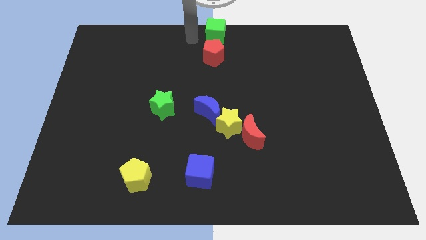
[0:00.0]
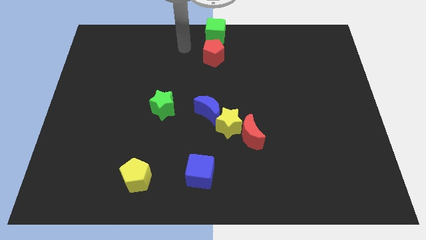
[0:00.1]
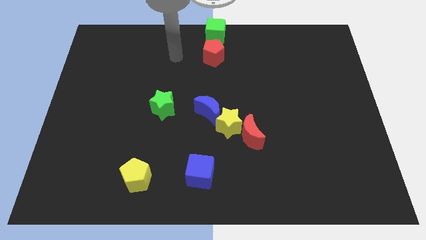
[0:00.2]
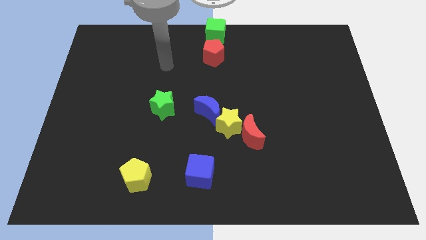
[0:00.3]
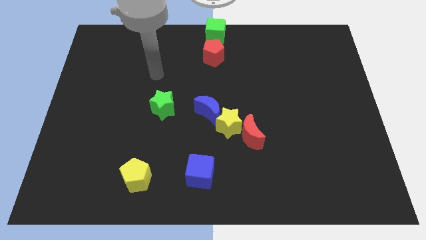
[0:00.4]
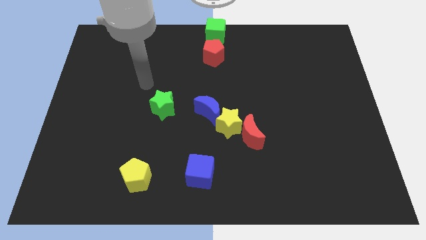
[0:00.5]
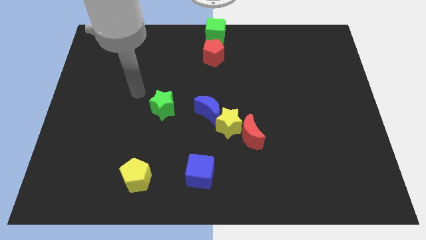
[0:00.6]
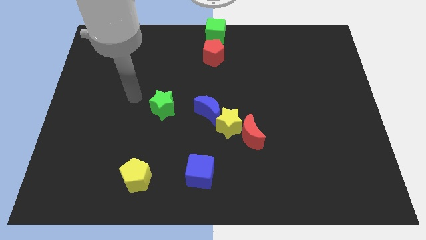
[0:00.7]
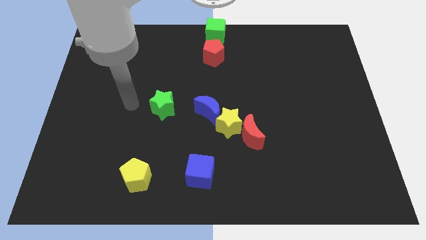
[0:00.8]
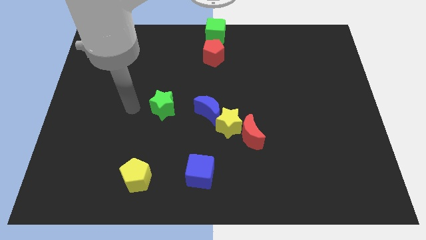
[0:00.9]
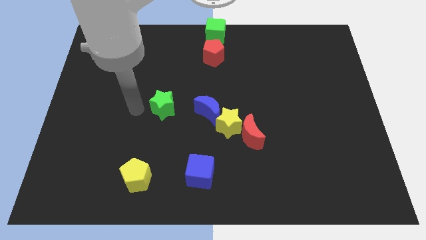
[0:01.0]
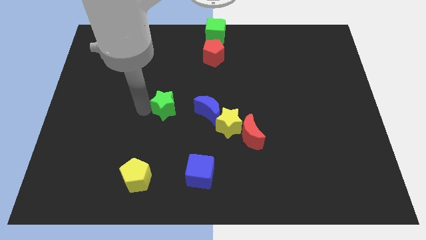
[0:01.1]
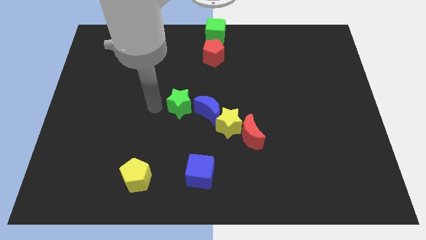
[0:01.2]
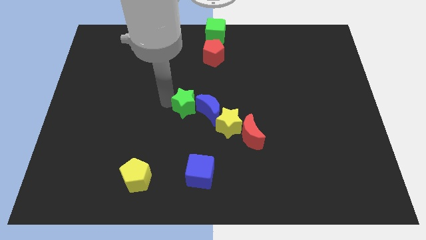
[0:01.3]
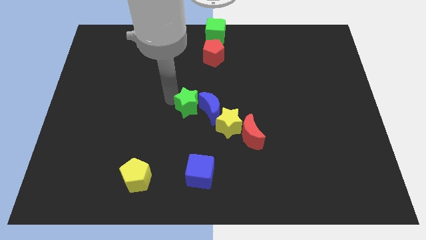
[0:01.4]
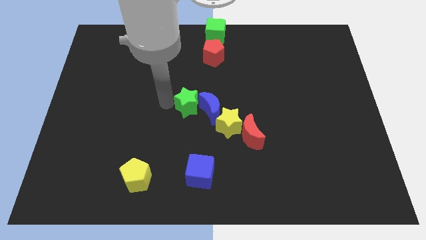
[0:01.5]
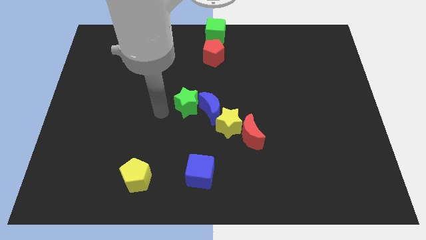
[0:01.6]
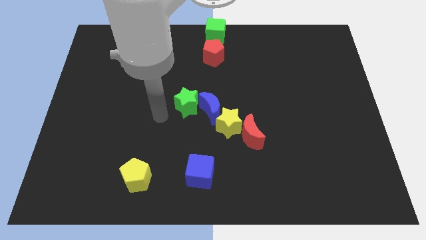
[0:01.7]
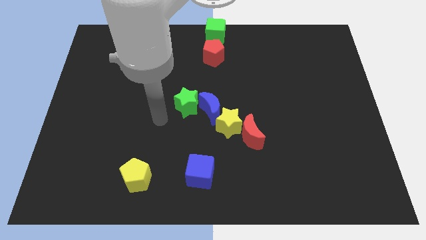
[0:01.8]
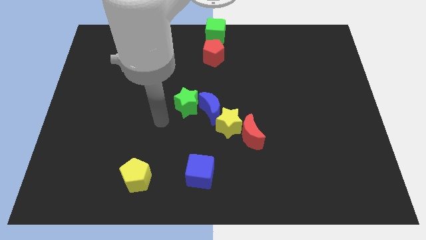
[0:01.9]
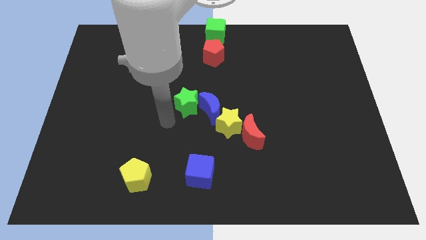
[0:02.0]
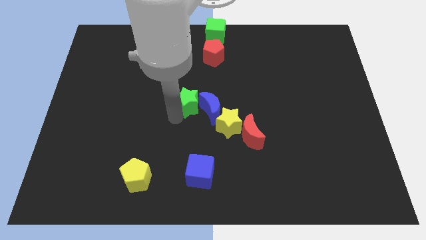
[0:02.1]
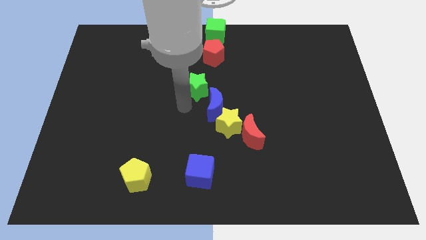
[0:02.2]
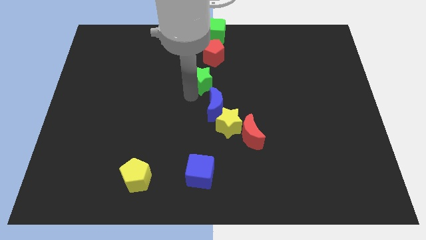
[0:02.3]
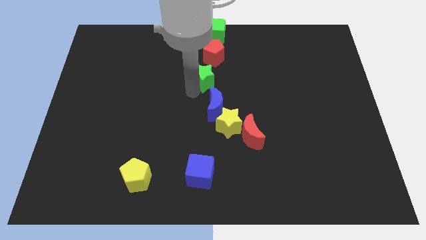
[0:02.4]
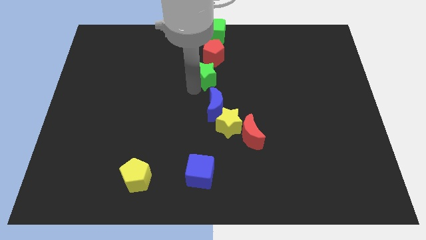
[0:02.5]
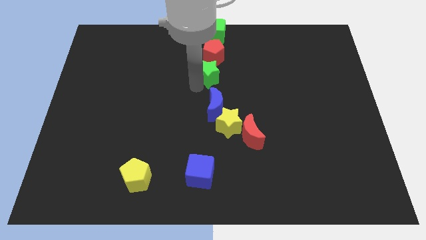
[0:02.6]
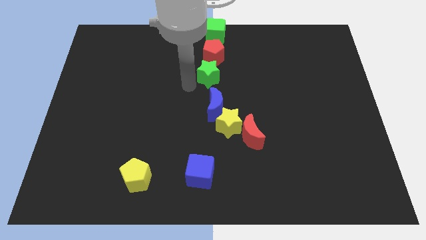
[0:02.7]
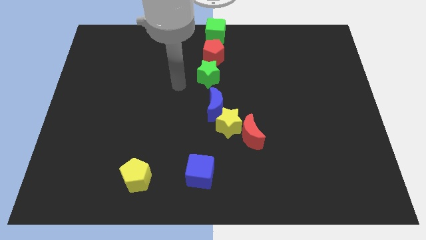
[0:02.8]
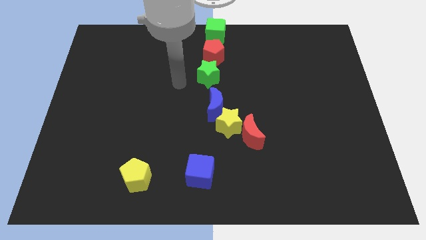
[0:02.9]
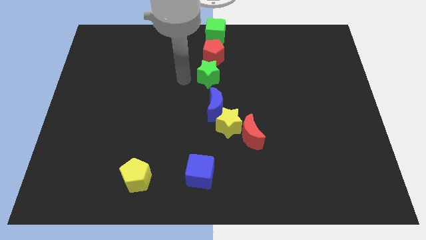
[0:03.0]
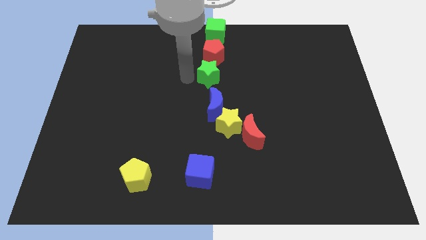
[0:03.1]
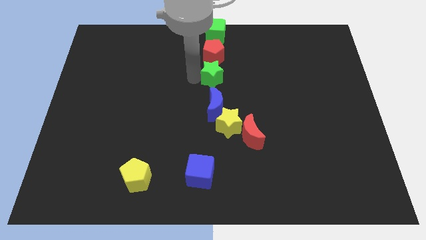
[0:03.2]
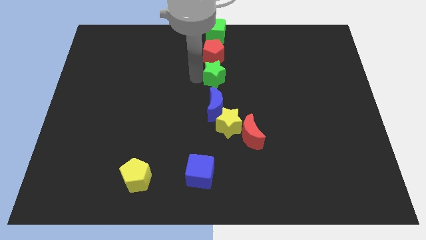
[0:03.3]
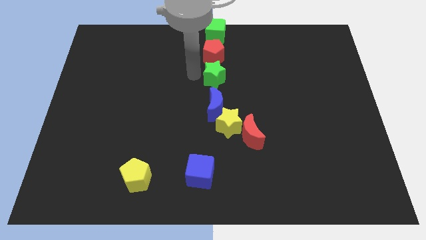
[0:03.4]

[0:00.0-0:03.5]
move the green star below the red pentagon

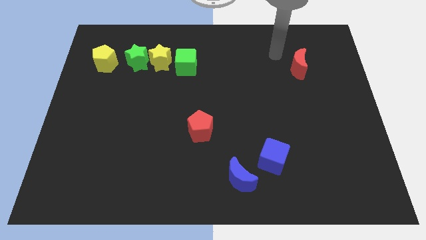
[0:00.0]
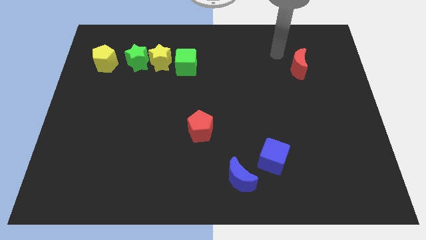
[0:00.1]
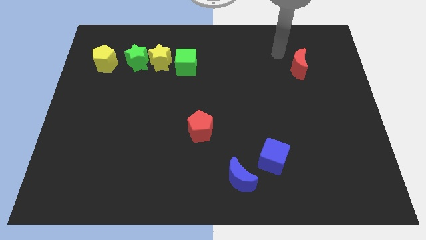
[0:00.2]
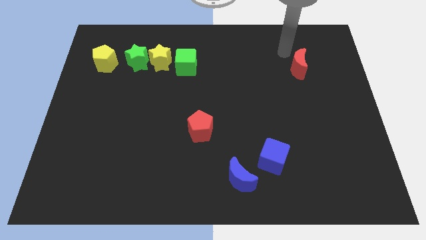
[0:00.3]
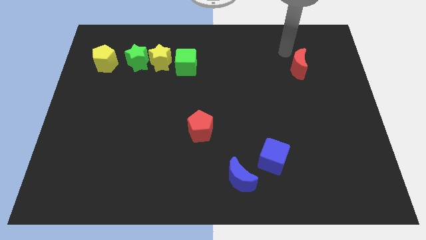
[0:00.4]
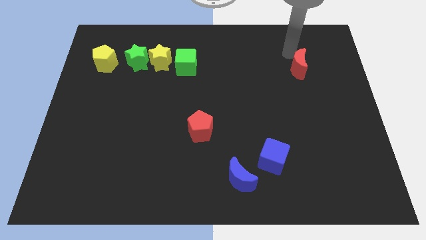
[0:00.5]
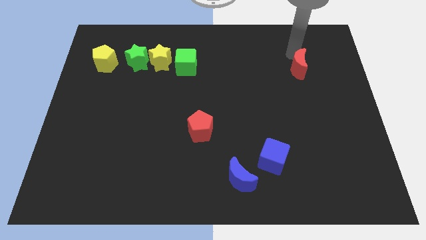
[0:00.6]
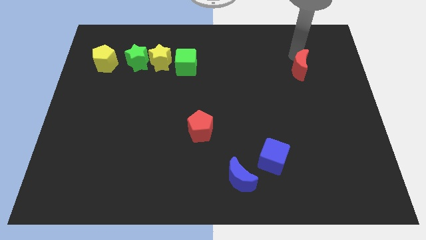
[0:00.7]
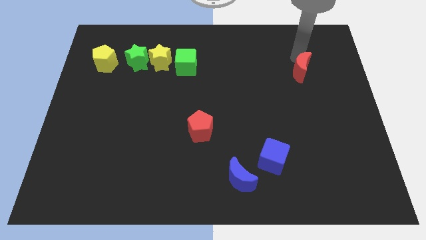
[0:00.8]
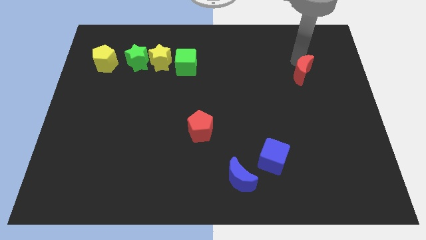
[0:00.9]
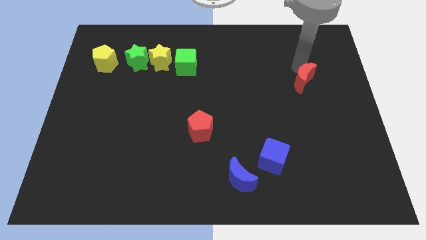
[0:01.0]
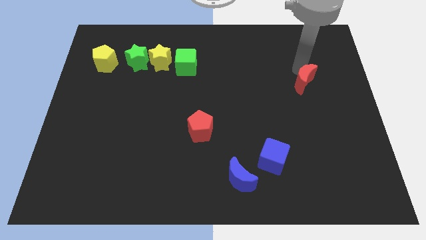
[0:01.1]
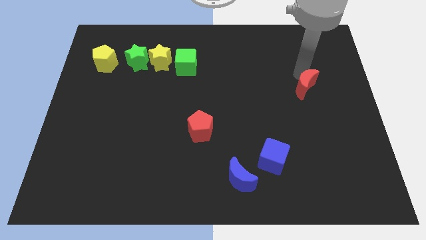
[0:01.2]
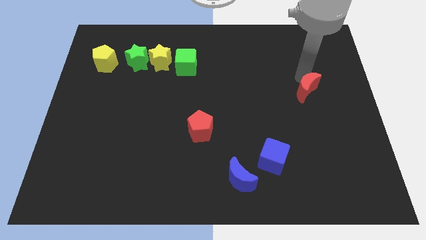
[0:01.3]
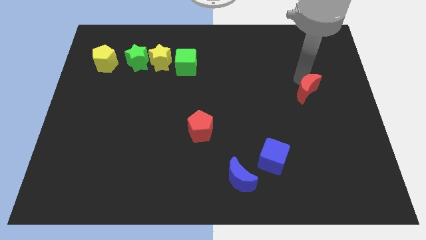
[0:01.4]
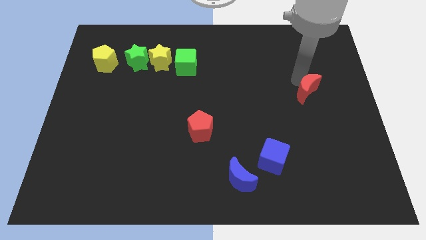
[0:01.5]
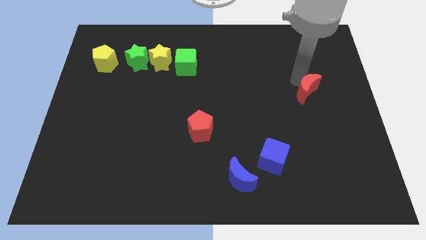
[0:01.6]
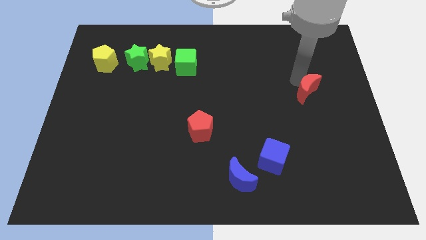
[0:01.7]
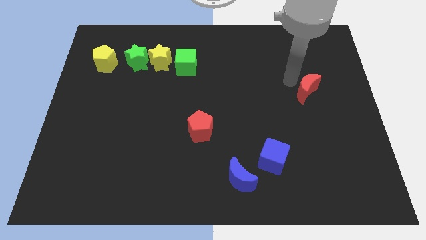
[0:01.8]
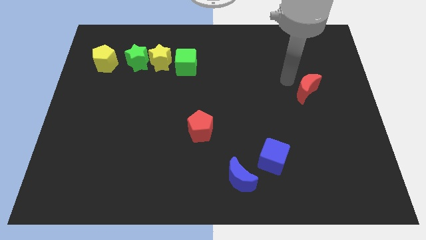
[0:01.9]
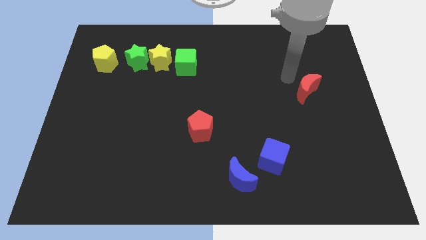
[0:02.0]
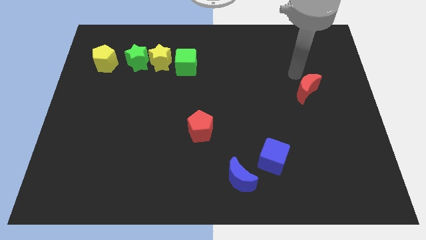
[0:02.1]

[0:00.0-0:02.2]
push the red crescent towards the bottom

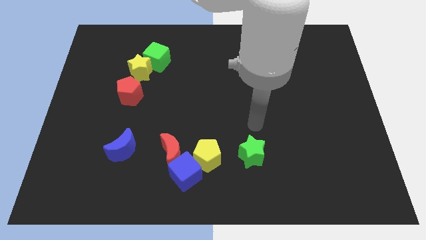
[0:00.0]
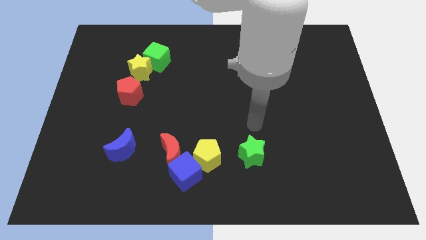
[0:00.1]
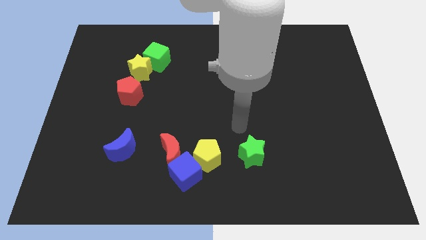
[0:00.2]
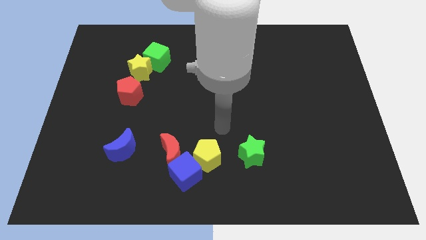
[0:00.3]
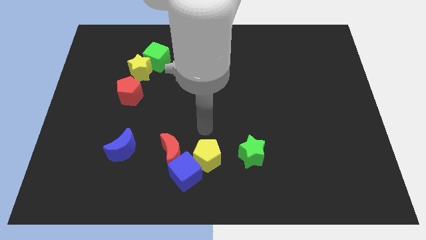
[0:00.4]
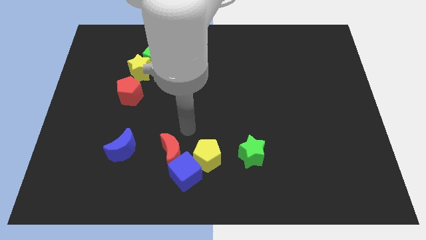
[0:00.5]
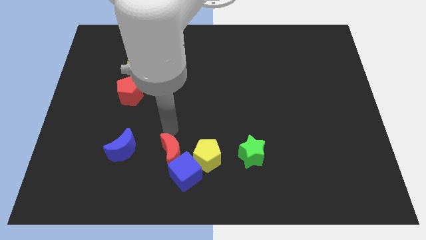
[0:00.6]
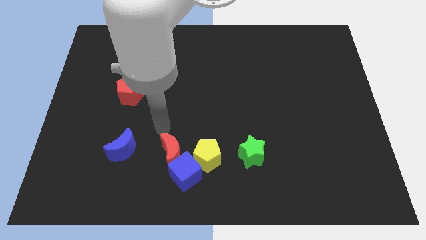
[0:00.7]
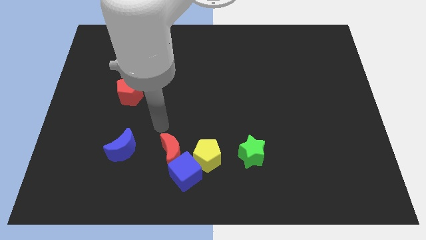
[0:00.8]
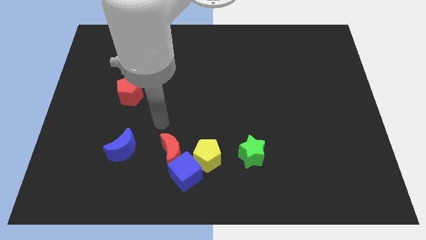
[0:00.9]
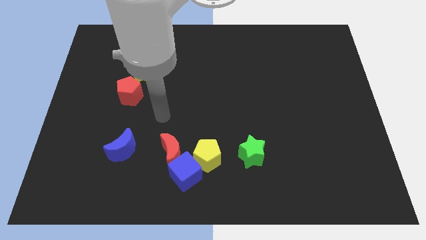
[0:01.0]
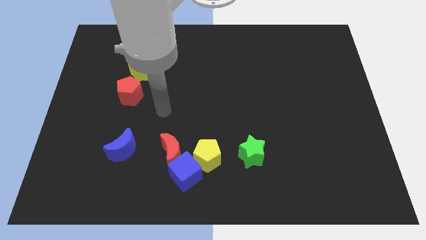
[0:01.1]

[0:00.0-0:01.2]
move your arm to the right of red pentagon

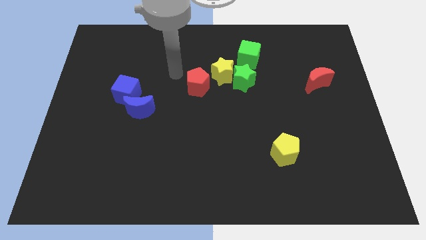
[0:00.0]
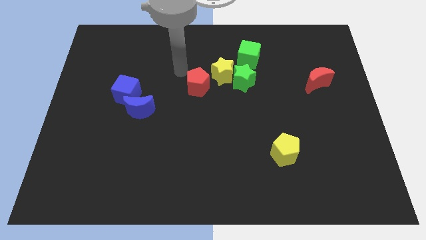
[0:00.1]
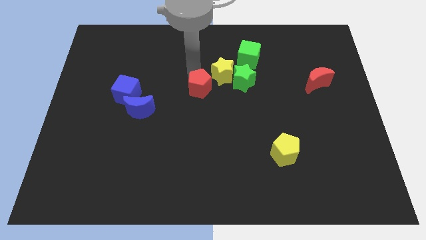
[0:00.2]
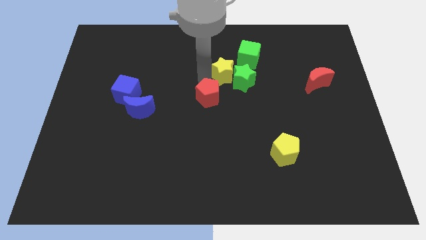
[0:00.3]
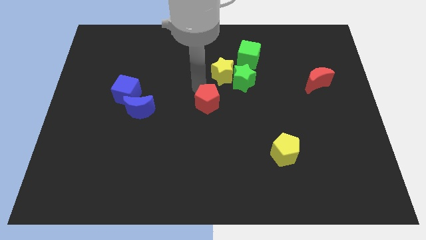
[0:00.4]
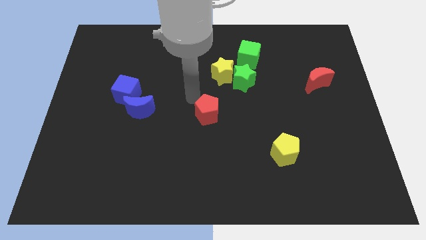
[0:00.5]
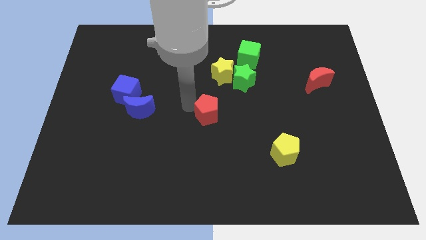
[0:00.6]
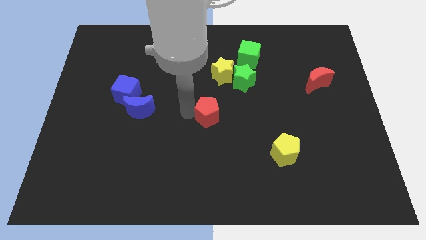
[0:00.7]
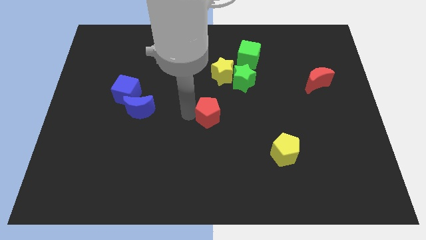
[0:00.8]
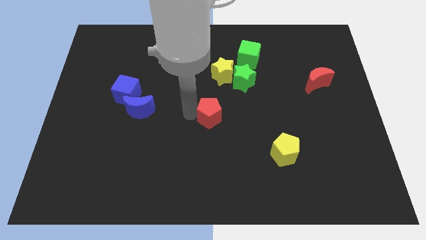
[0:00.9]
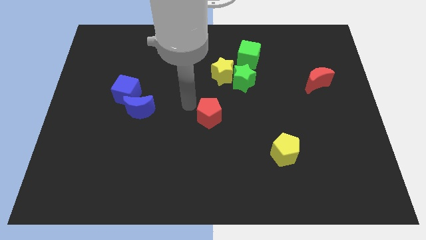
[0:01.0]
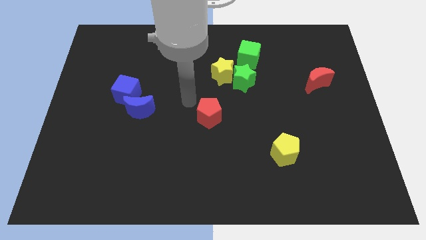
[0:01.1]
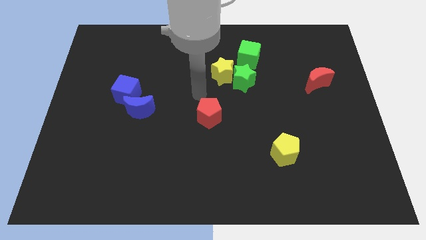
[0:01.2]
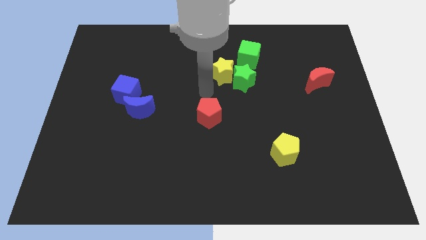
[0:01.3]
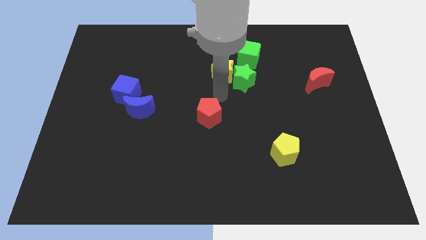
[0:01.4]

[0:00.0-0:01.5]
put the red pentagon diagonal to the yellow pentagon

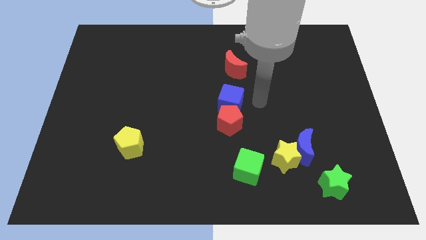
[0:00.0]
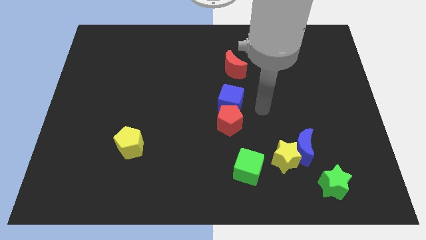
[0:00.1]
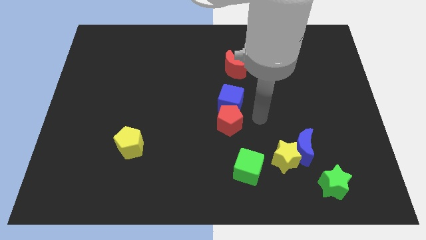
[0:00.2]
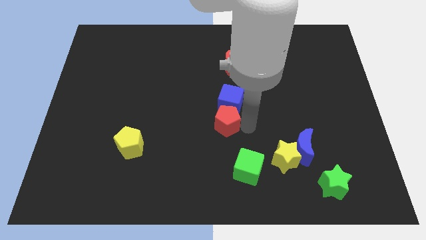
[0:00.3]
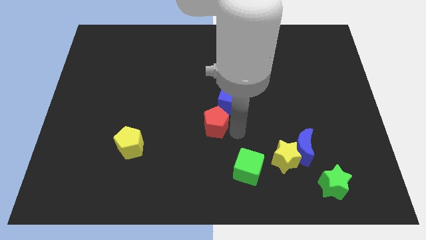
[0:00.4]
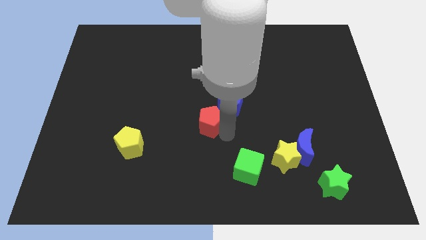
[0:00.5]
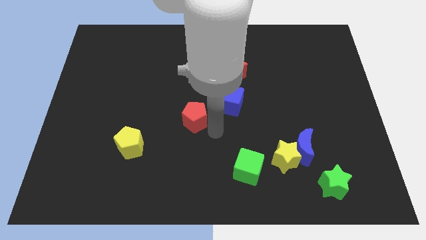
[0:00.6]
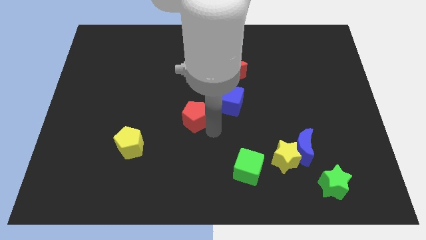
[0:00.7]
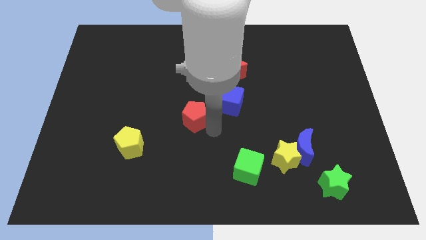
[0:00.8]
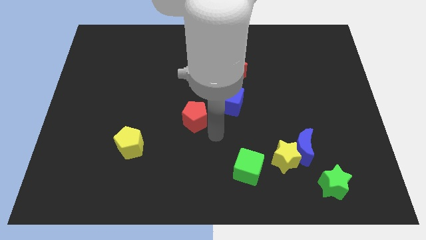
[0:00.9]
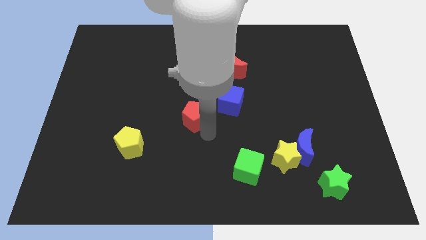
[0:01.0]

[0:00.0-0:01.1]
separate the blue cube and the red pentagon
